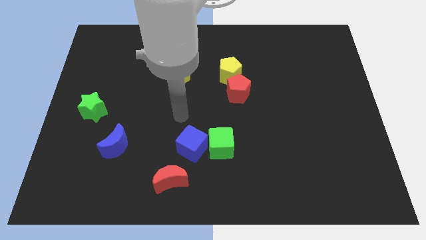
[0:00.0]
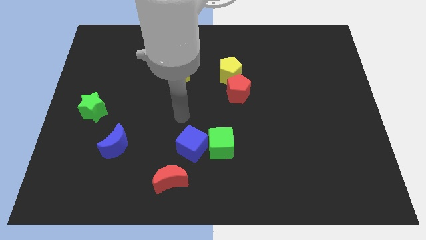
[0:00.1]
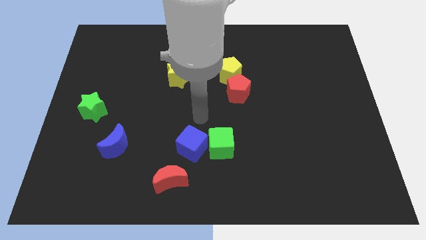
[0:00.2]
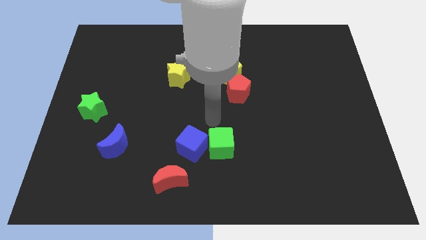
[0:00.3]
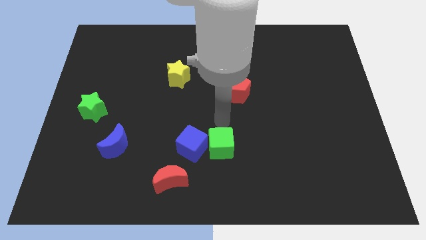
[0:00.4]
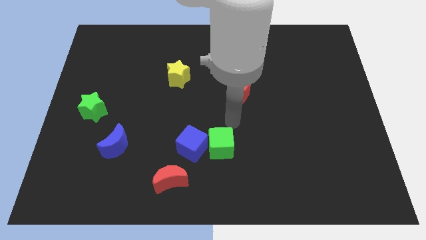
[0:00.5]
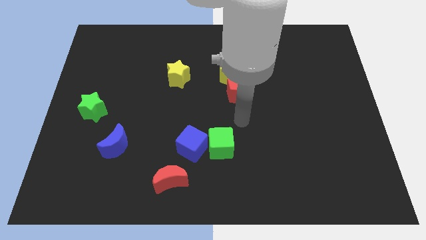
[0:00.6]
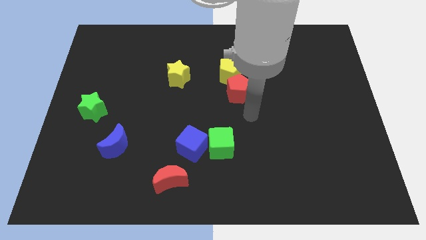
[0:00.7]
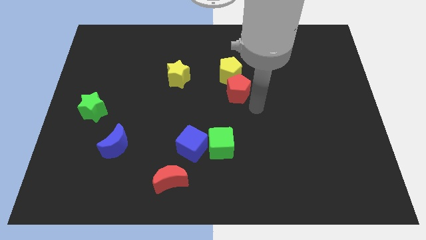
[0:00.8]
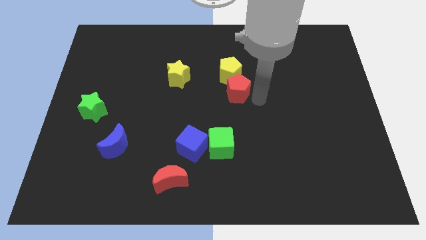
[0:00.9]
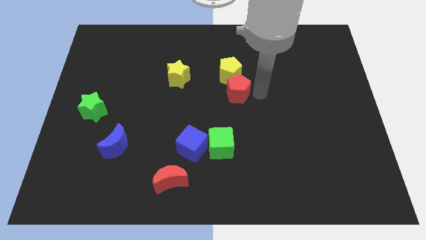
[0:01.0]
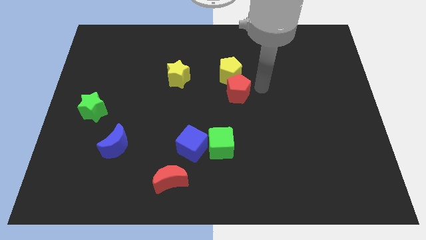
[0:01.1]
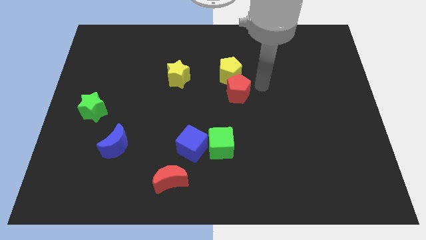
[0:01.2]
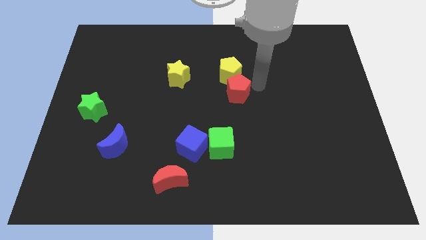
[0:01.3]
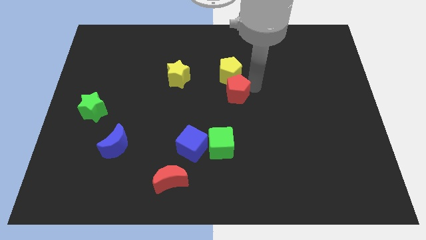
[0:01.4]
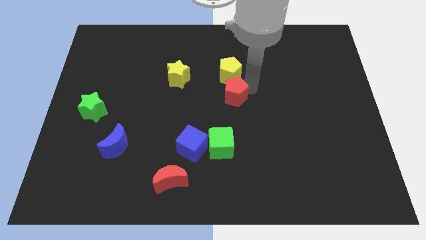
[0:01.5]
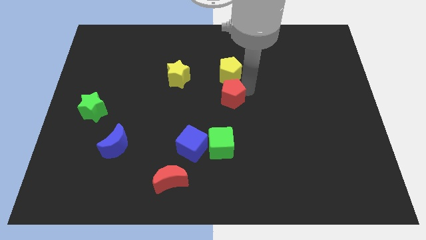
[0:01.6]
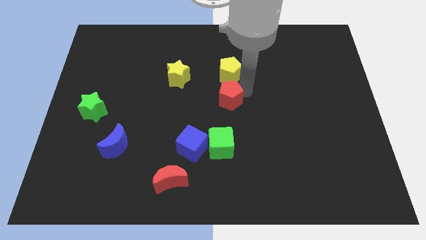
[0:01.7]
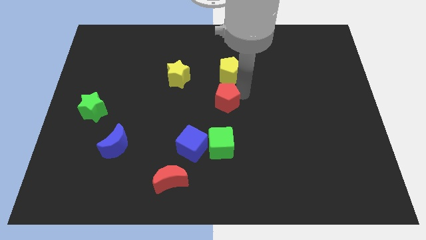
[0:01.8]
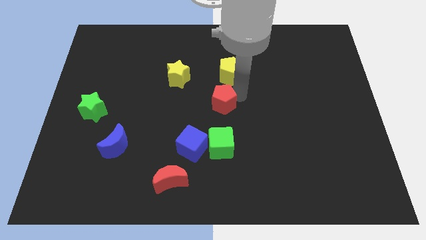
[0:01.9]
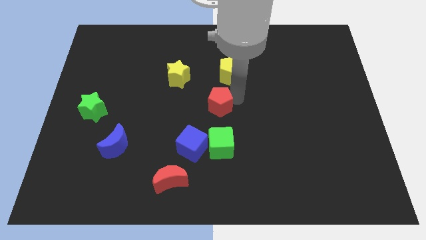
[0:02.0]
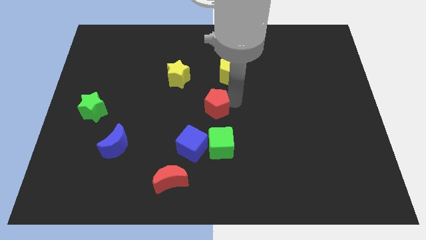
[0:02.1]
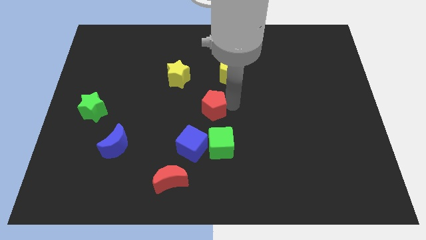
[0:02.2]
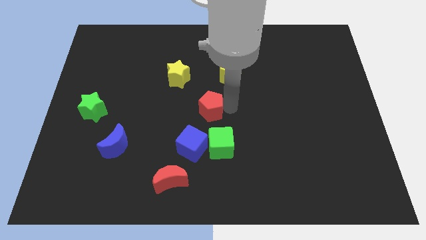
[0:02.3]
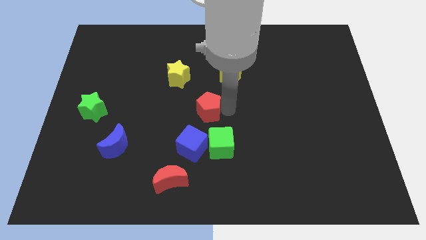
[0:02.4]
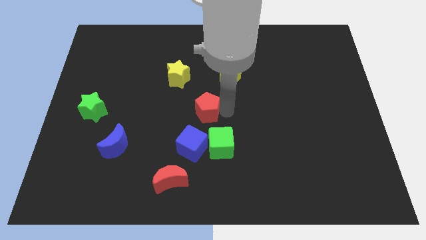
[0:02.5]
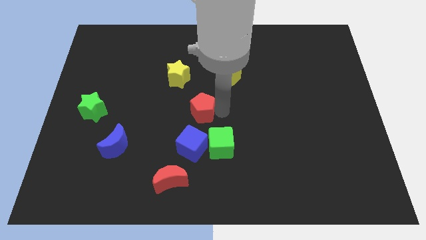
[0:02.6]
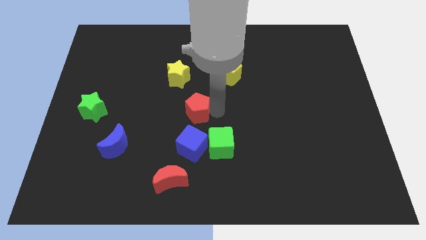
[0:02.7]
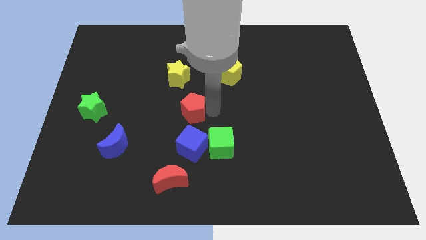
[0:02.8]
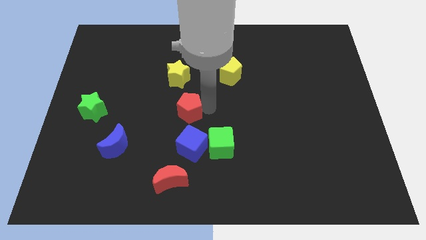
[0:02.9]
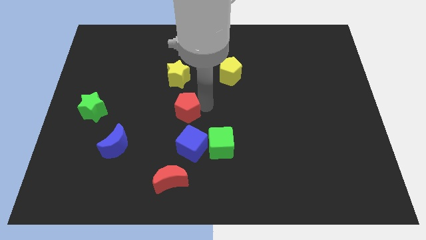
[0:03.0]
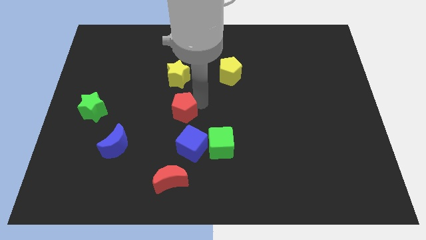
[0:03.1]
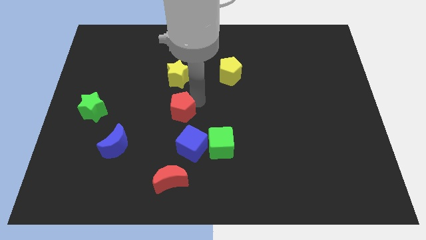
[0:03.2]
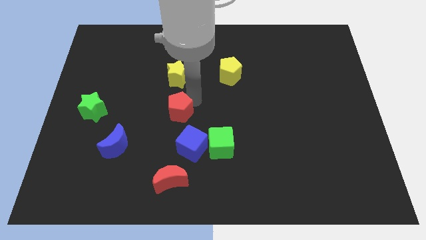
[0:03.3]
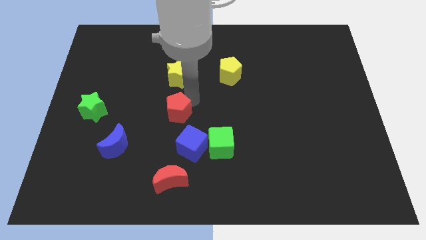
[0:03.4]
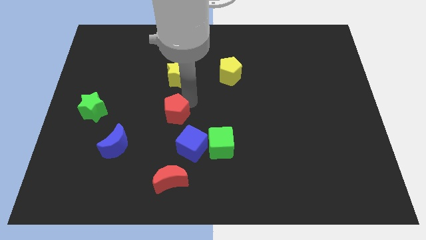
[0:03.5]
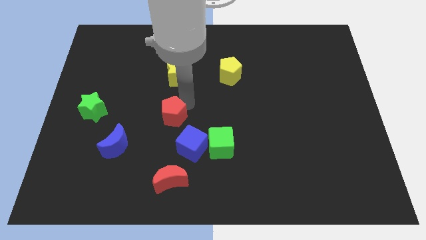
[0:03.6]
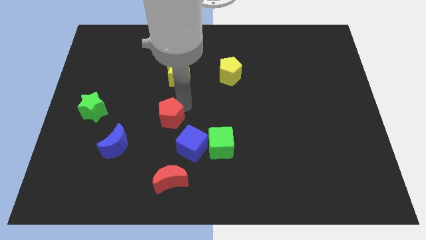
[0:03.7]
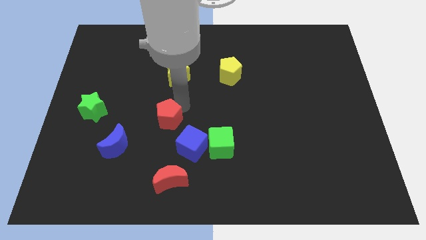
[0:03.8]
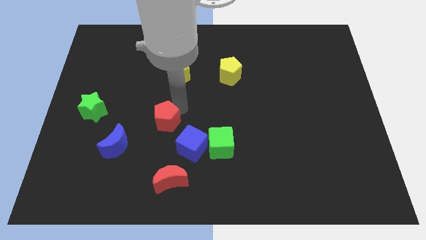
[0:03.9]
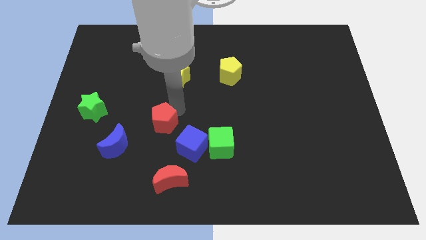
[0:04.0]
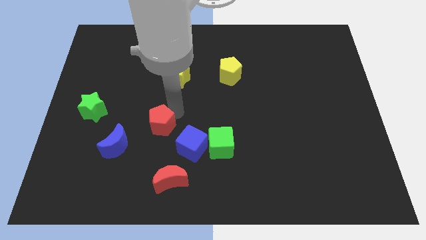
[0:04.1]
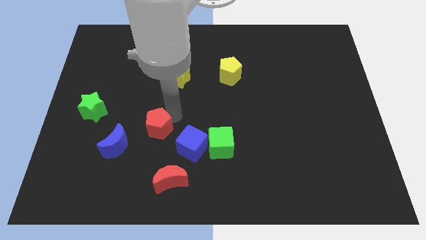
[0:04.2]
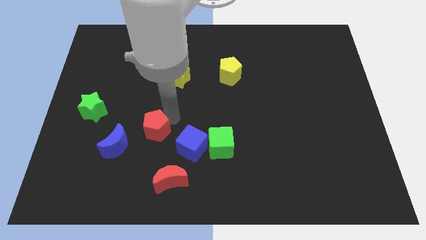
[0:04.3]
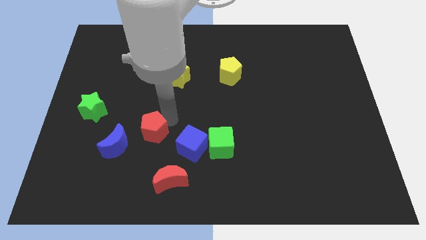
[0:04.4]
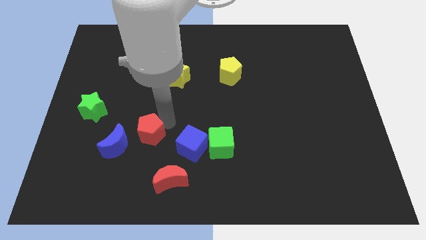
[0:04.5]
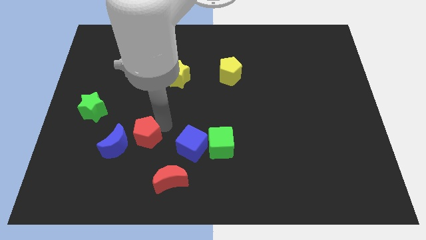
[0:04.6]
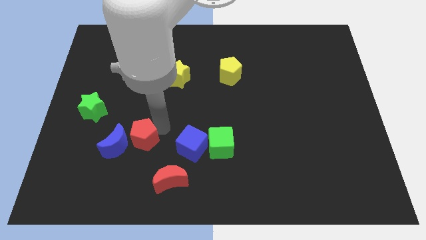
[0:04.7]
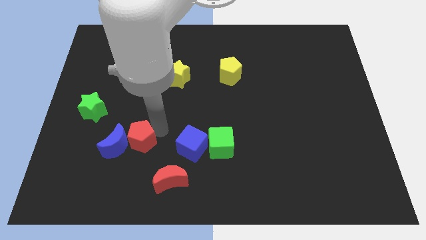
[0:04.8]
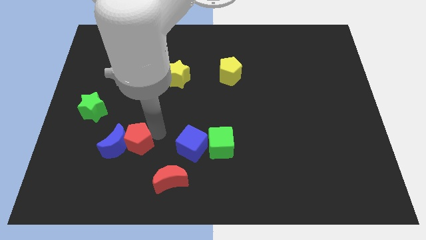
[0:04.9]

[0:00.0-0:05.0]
put the red pentagon close to the blue moon

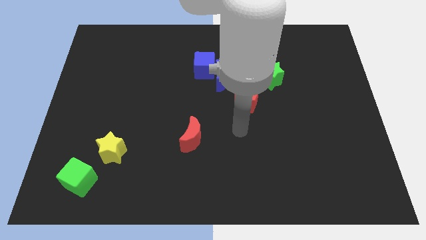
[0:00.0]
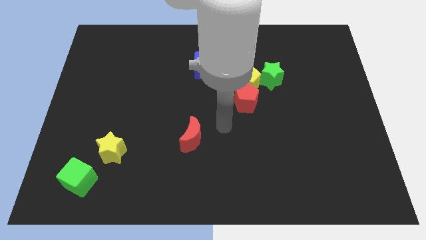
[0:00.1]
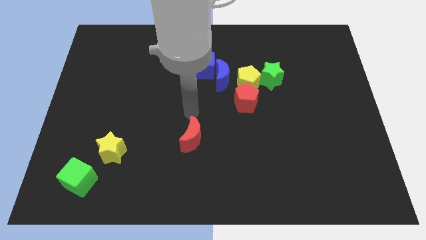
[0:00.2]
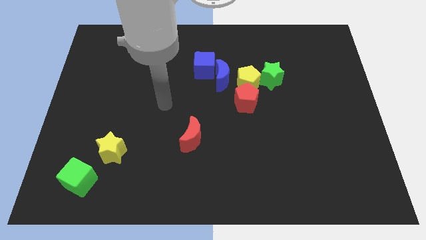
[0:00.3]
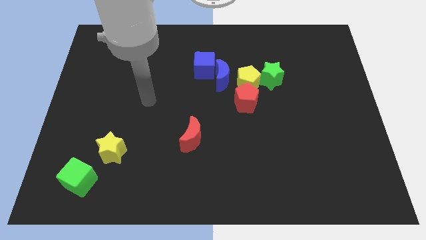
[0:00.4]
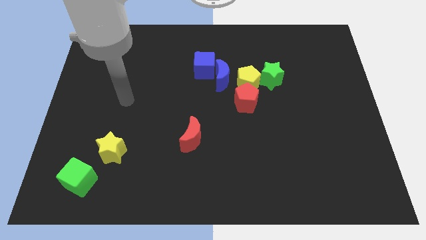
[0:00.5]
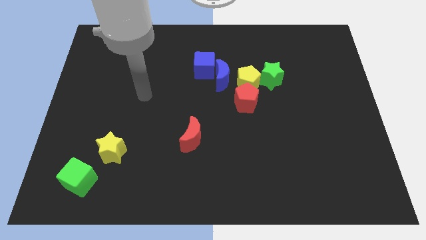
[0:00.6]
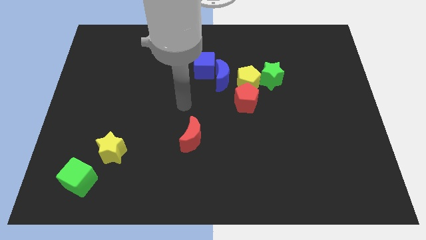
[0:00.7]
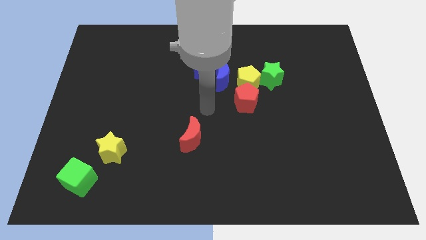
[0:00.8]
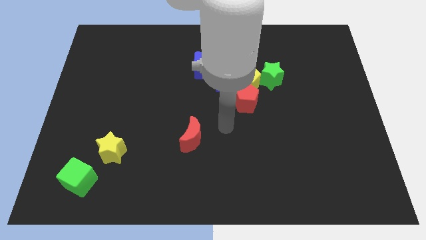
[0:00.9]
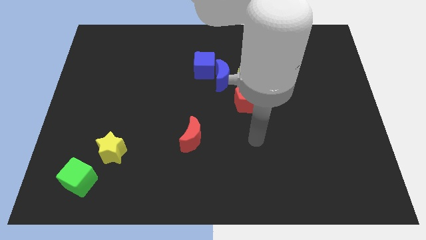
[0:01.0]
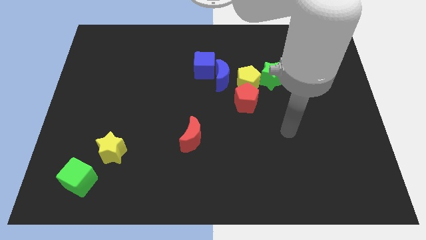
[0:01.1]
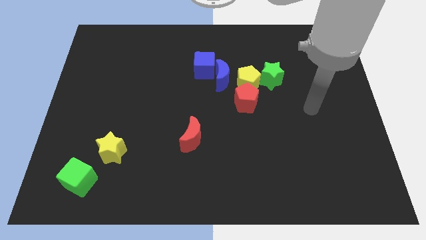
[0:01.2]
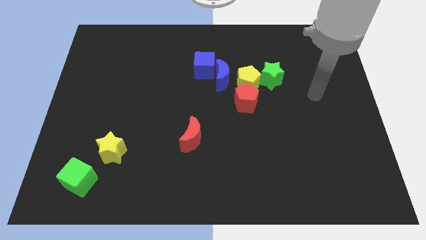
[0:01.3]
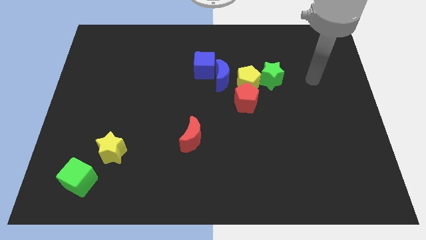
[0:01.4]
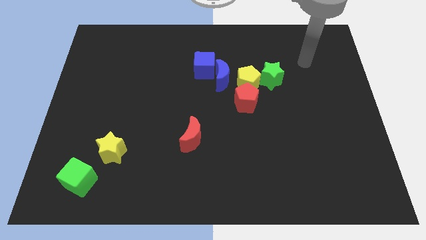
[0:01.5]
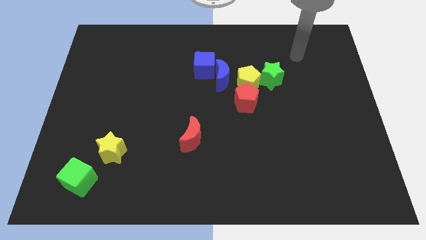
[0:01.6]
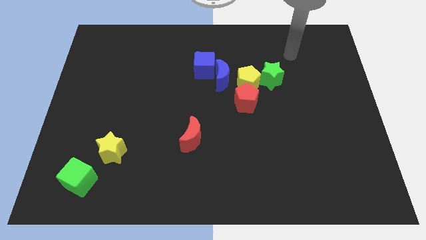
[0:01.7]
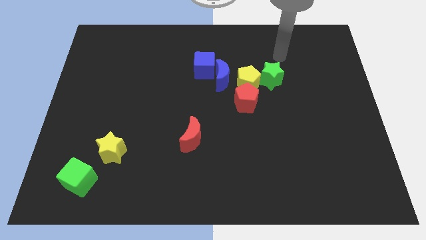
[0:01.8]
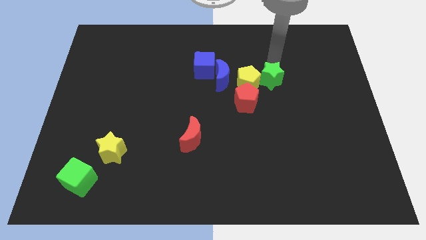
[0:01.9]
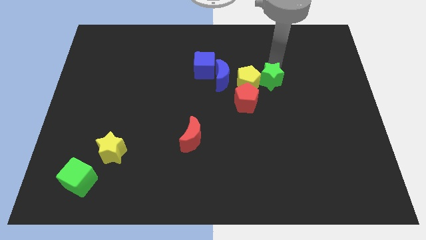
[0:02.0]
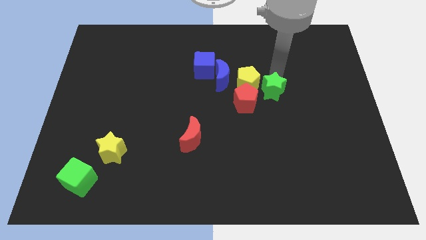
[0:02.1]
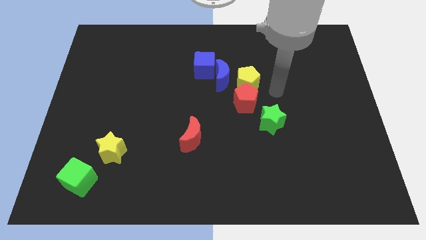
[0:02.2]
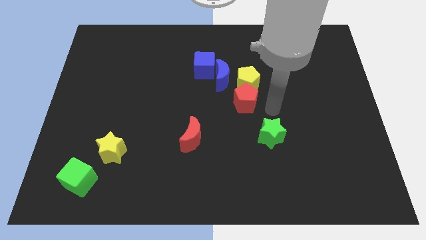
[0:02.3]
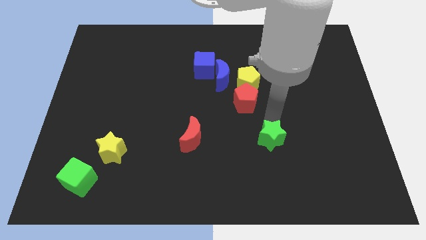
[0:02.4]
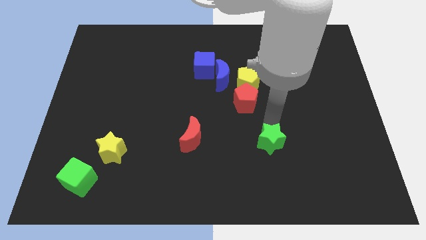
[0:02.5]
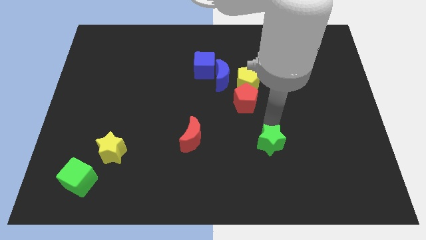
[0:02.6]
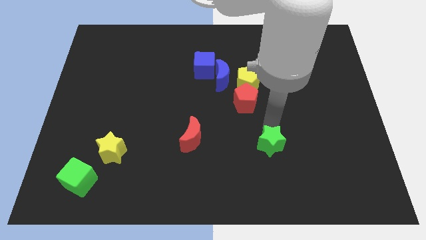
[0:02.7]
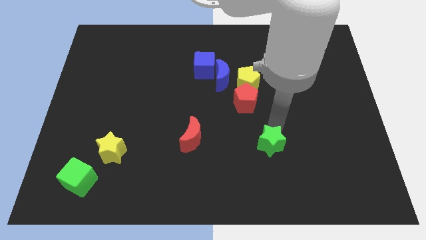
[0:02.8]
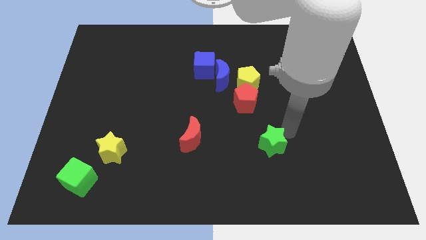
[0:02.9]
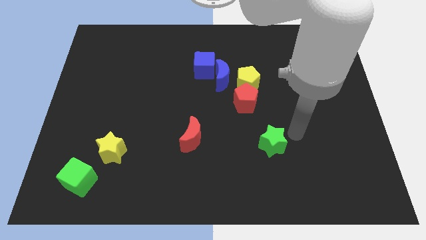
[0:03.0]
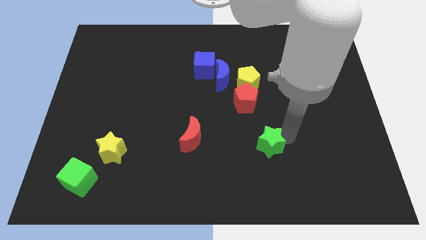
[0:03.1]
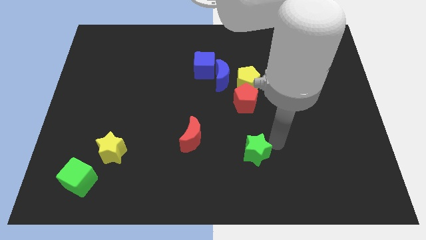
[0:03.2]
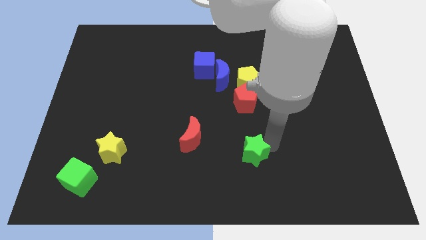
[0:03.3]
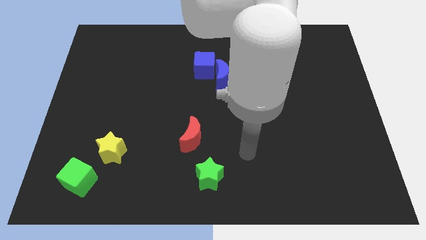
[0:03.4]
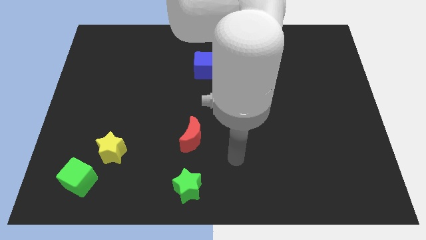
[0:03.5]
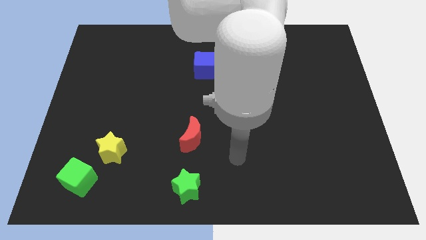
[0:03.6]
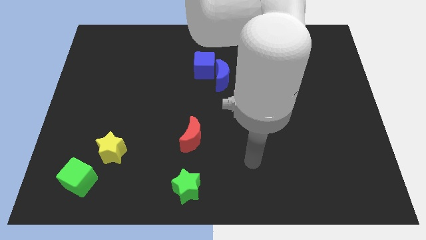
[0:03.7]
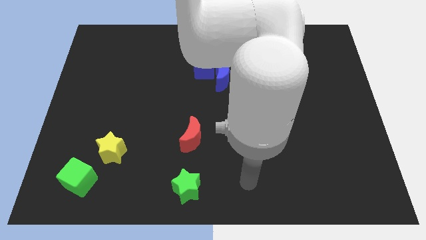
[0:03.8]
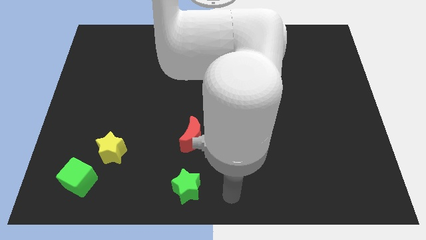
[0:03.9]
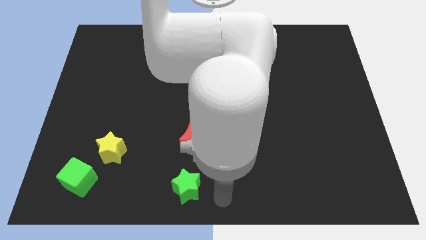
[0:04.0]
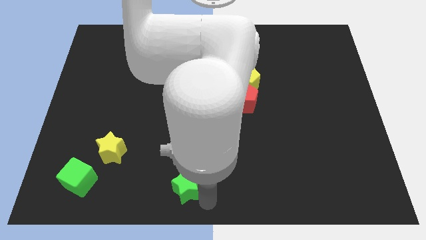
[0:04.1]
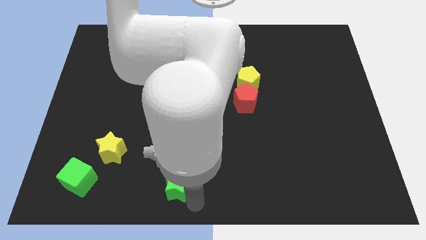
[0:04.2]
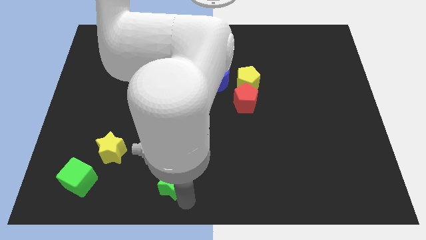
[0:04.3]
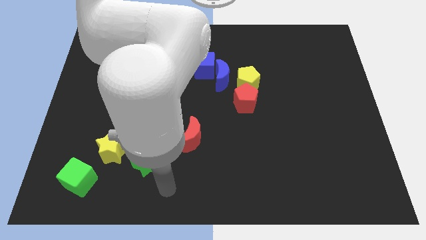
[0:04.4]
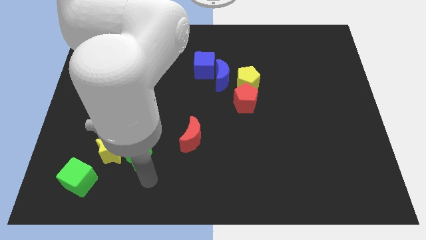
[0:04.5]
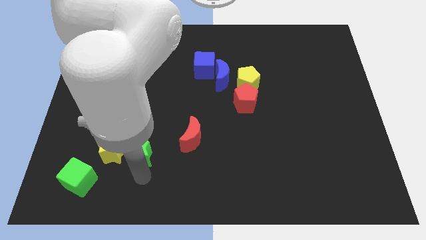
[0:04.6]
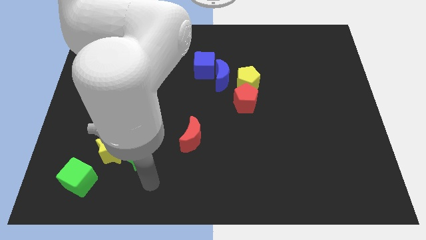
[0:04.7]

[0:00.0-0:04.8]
put the green star next to the yellow star
